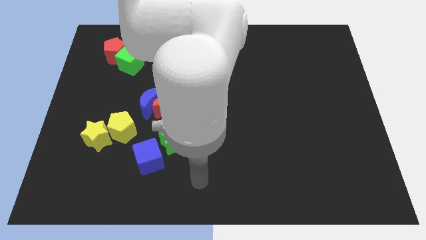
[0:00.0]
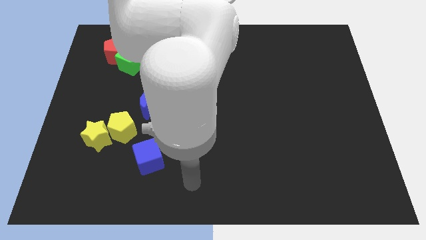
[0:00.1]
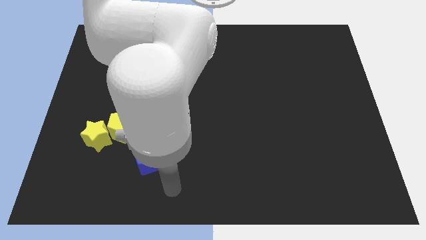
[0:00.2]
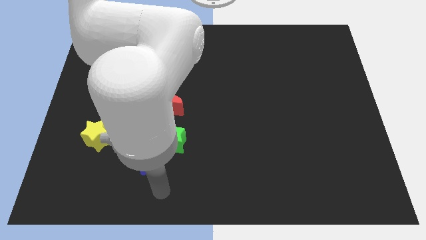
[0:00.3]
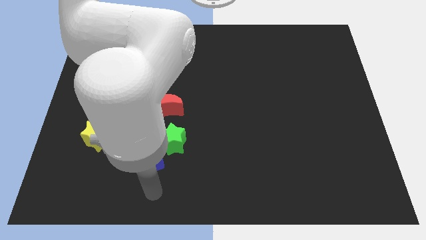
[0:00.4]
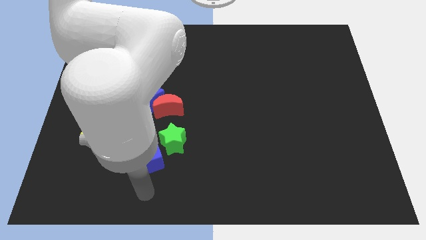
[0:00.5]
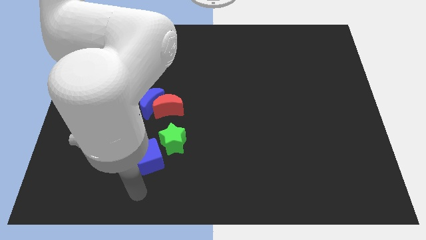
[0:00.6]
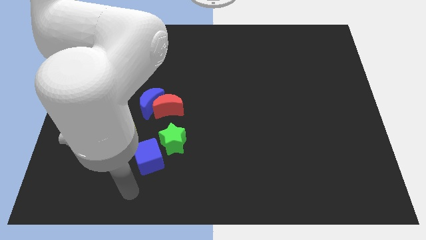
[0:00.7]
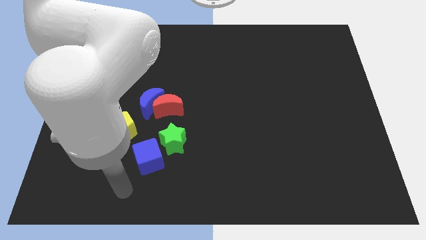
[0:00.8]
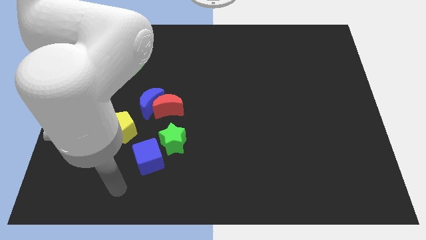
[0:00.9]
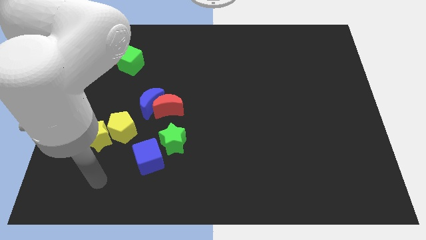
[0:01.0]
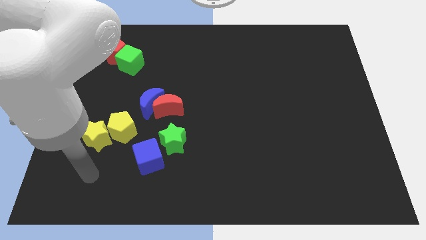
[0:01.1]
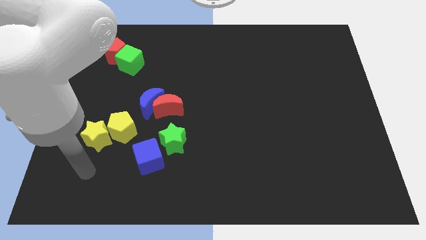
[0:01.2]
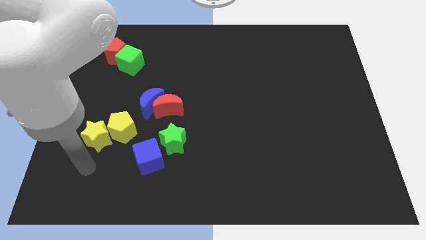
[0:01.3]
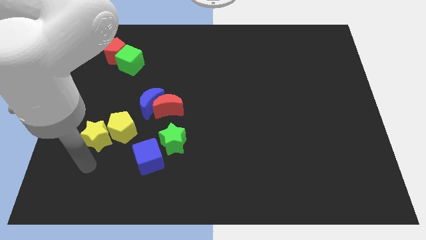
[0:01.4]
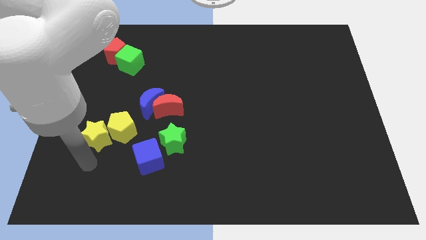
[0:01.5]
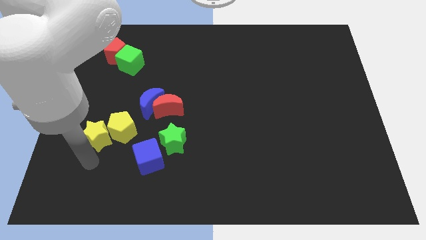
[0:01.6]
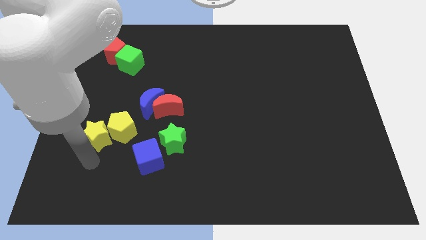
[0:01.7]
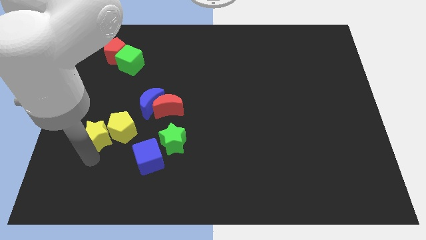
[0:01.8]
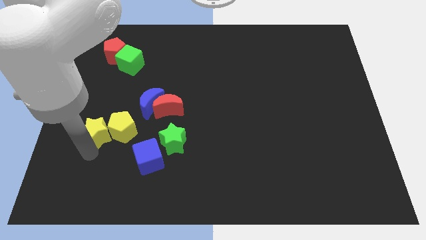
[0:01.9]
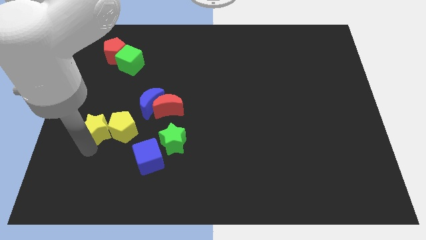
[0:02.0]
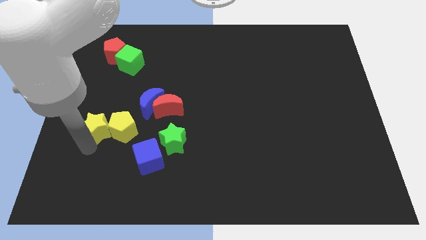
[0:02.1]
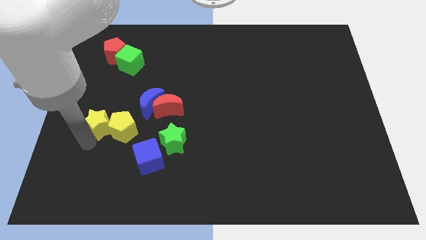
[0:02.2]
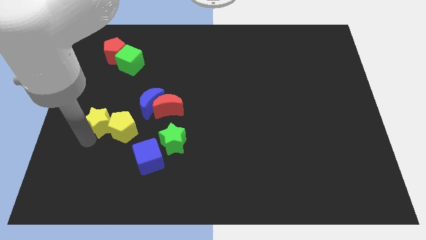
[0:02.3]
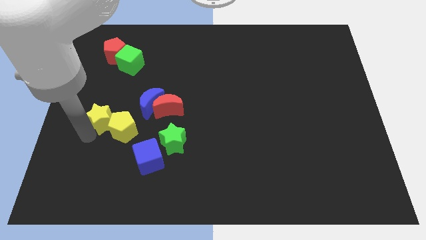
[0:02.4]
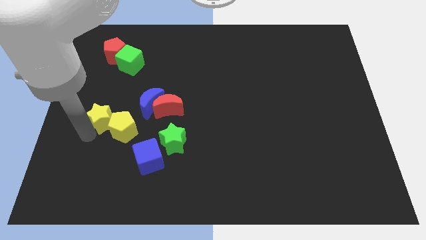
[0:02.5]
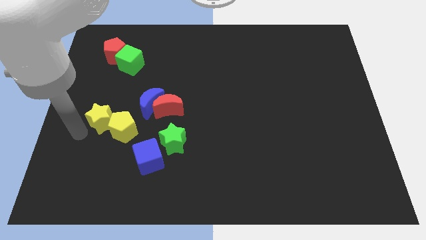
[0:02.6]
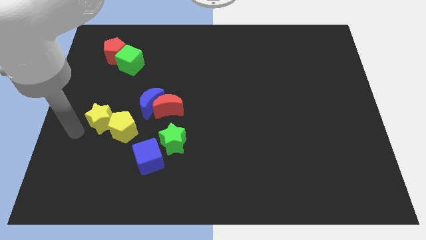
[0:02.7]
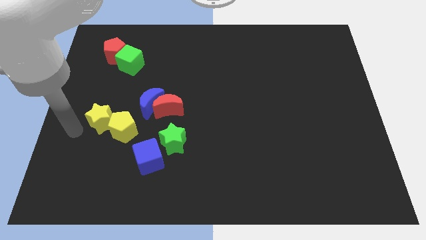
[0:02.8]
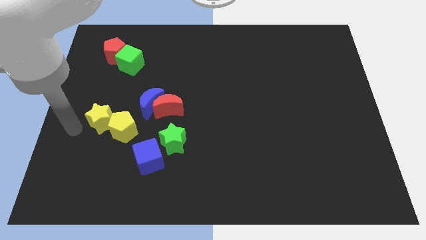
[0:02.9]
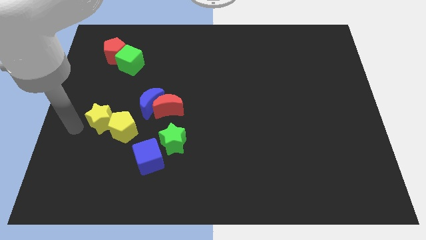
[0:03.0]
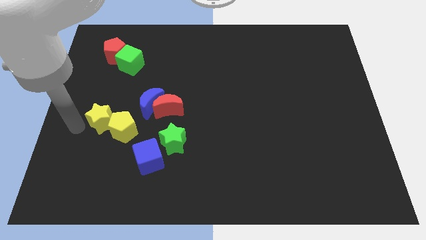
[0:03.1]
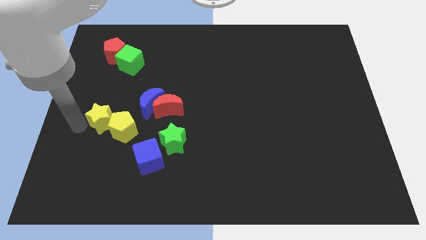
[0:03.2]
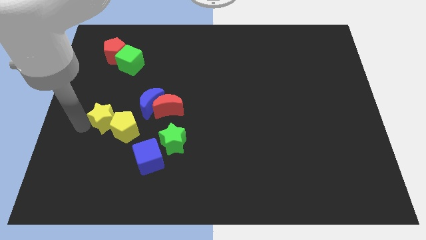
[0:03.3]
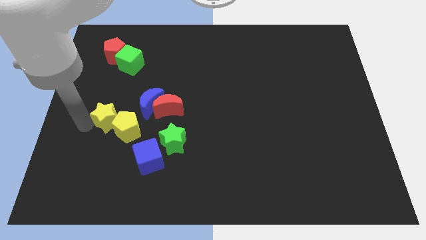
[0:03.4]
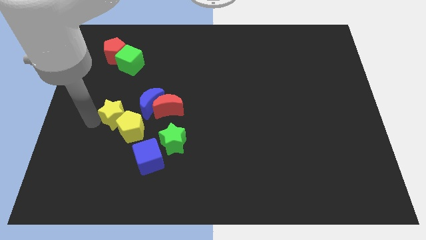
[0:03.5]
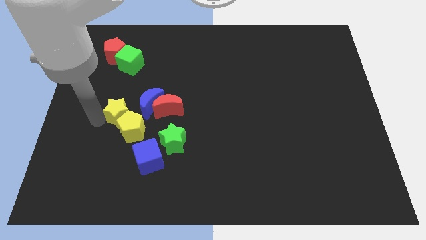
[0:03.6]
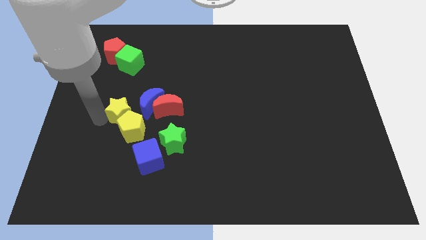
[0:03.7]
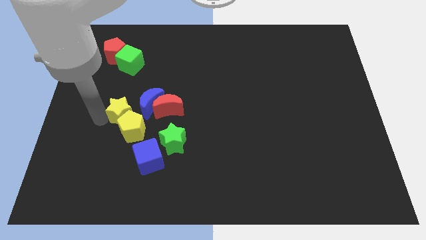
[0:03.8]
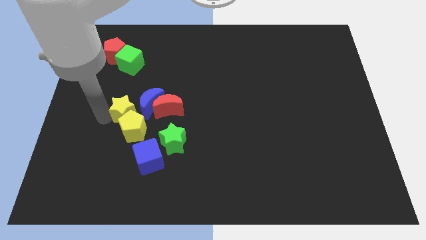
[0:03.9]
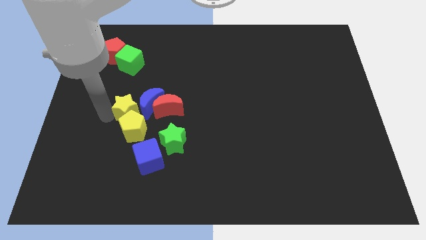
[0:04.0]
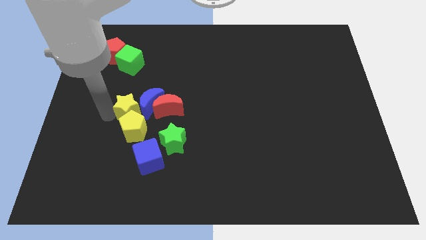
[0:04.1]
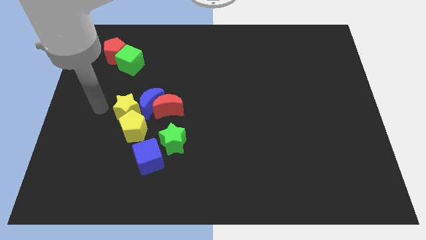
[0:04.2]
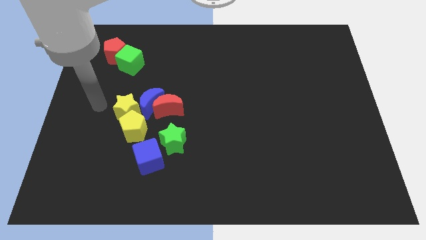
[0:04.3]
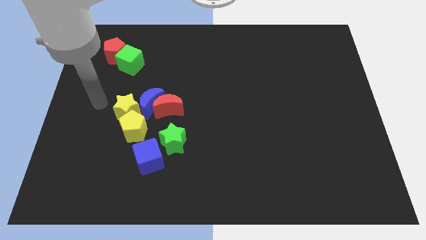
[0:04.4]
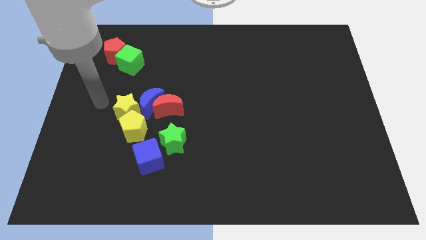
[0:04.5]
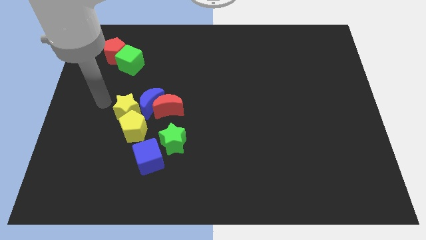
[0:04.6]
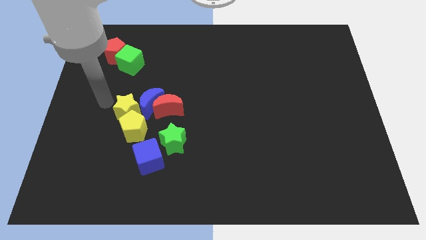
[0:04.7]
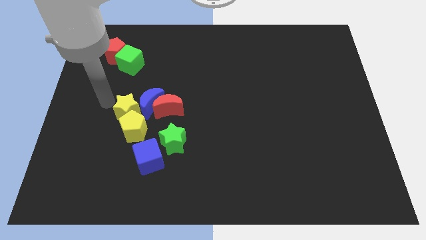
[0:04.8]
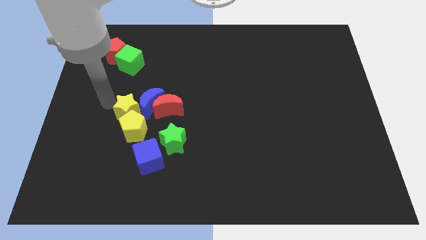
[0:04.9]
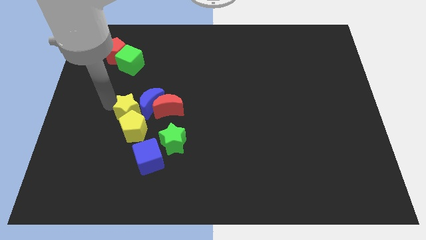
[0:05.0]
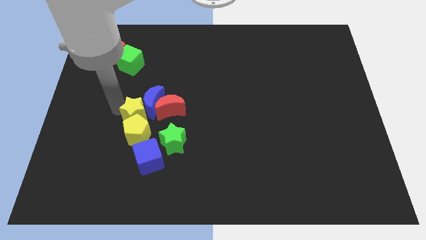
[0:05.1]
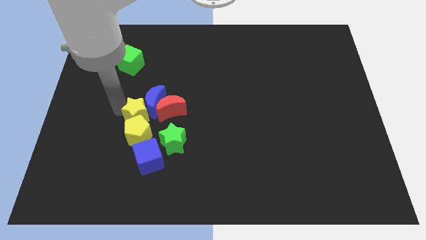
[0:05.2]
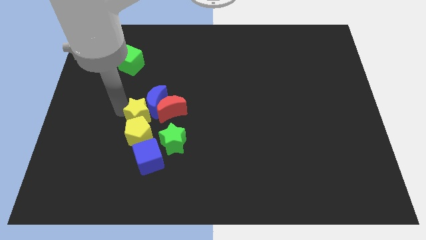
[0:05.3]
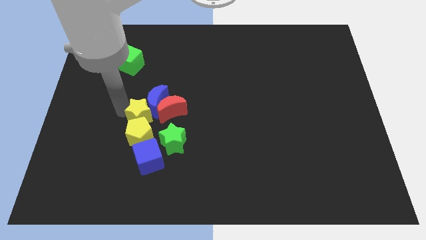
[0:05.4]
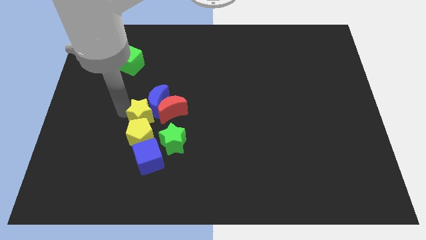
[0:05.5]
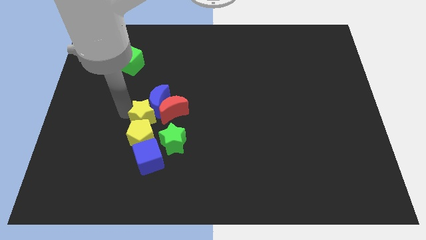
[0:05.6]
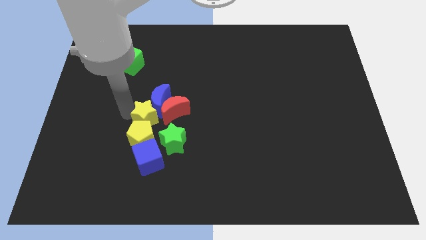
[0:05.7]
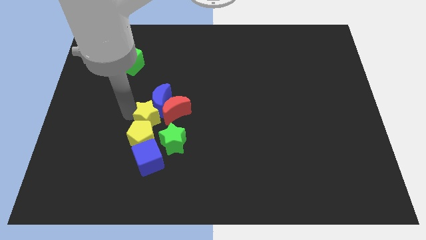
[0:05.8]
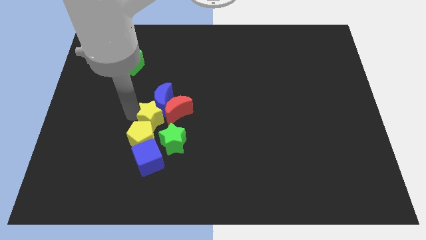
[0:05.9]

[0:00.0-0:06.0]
move the yellow star next to the red moon

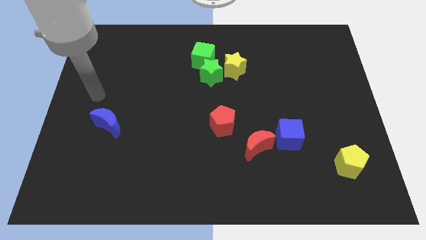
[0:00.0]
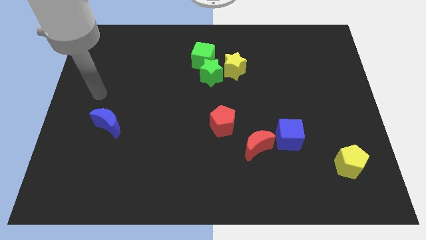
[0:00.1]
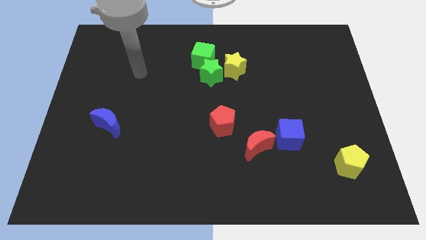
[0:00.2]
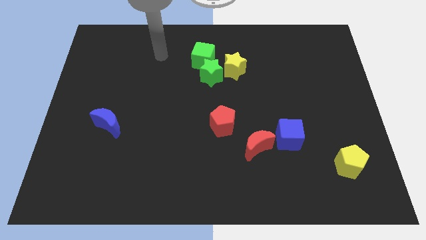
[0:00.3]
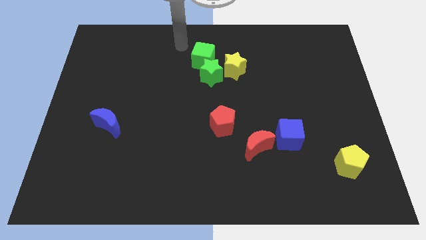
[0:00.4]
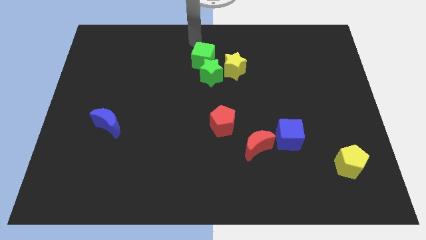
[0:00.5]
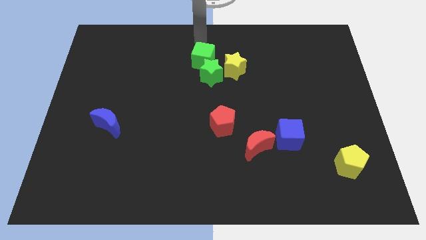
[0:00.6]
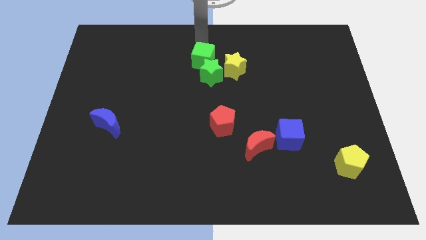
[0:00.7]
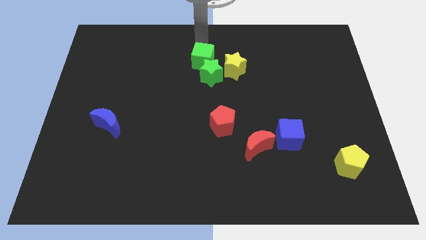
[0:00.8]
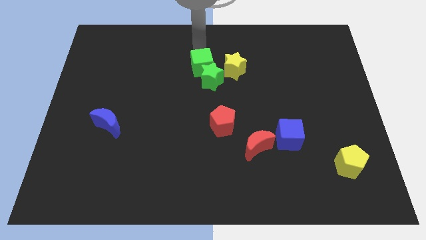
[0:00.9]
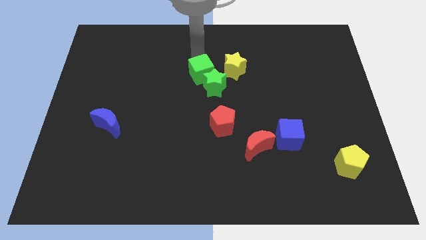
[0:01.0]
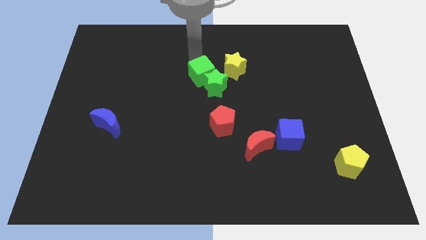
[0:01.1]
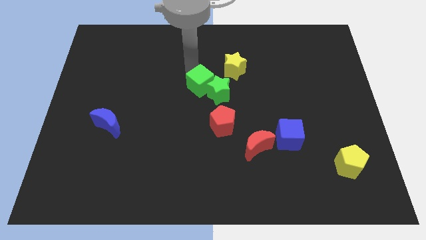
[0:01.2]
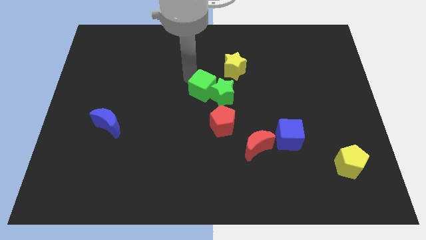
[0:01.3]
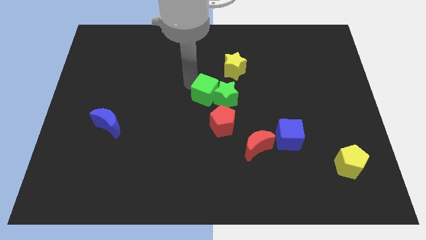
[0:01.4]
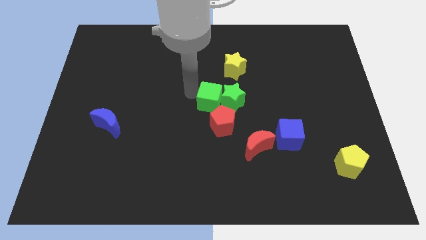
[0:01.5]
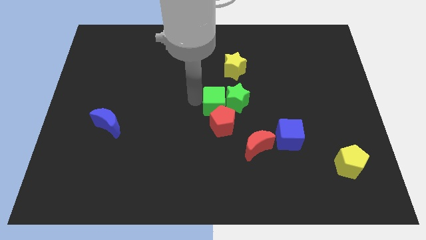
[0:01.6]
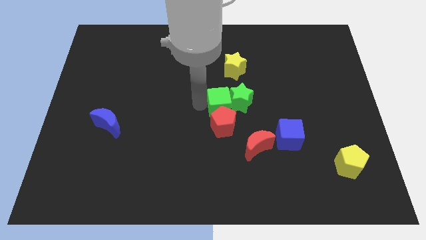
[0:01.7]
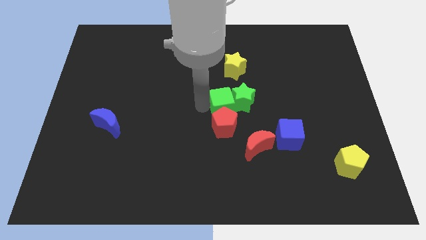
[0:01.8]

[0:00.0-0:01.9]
slide the green cube towards the red pentagon

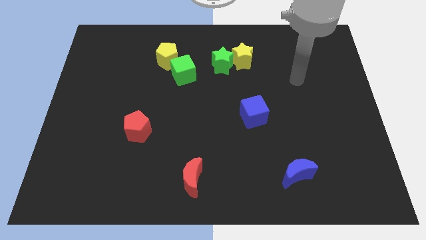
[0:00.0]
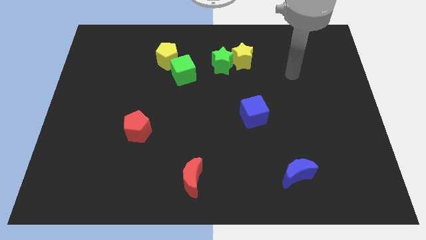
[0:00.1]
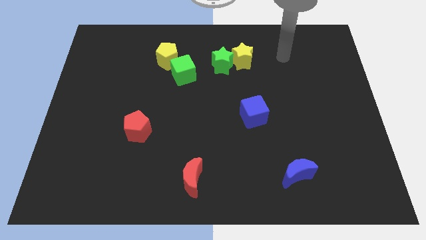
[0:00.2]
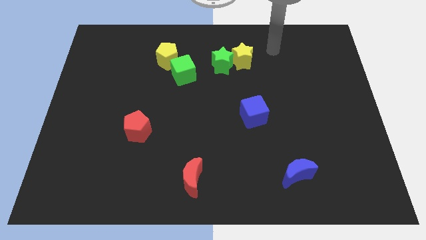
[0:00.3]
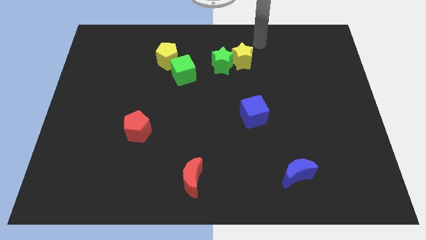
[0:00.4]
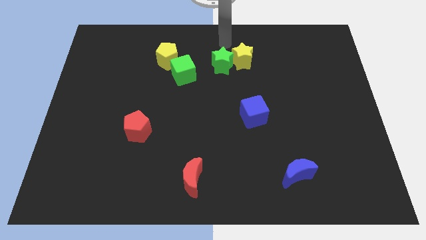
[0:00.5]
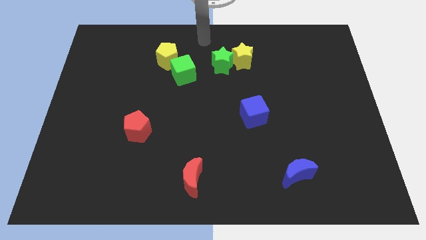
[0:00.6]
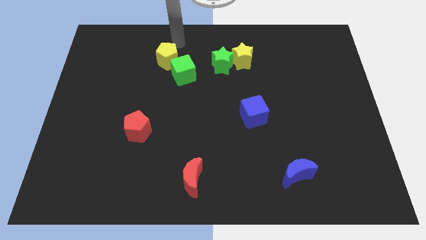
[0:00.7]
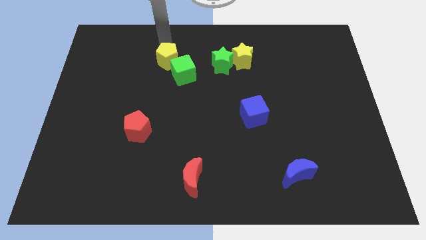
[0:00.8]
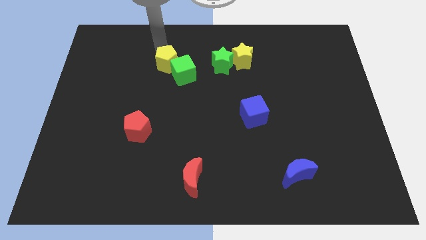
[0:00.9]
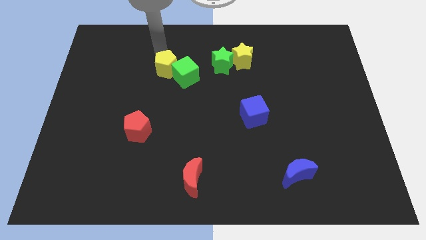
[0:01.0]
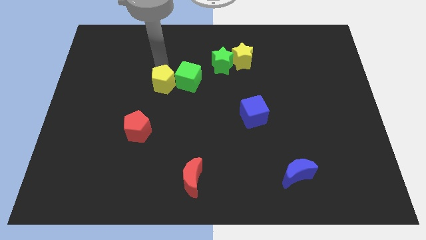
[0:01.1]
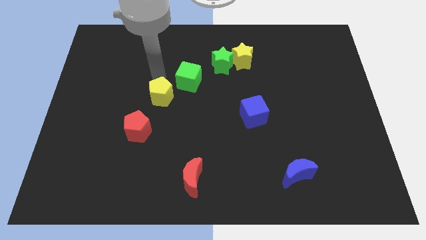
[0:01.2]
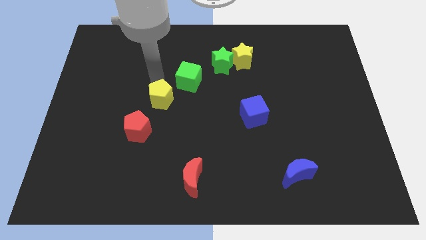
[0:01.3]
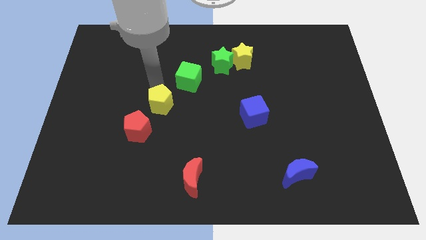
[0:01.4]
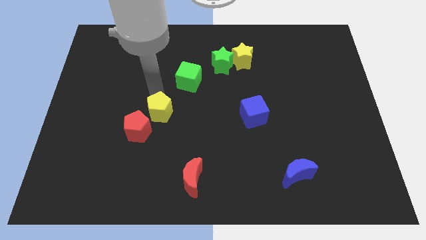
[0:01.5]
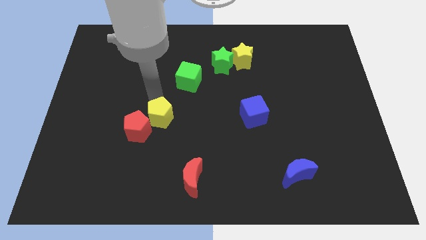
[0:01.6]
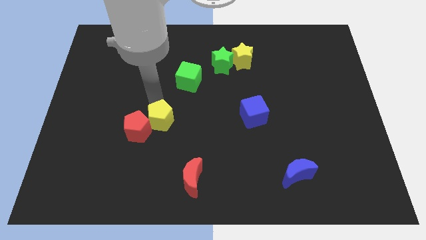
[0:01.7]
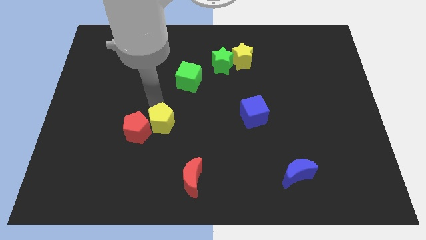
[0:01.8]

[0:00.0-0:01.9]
move the yellow pentagon towards the red pentagon
